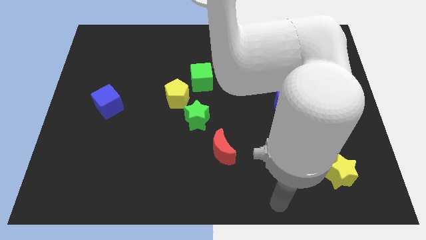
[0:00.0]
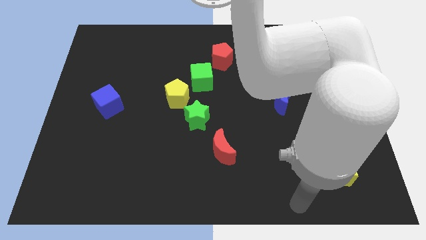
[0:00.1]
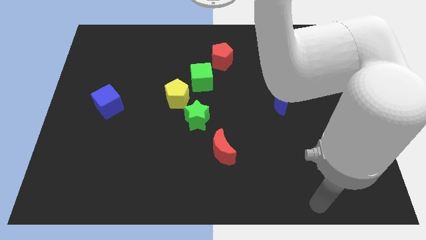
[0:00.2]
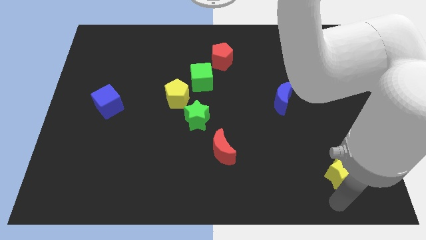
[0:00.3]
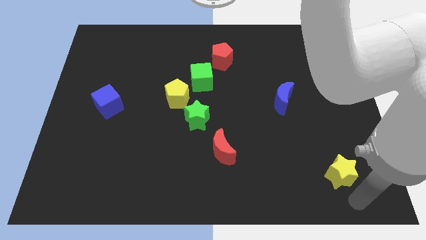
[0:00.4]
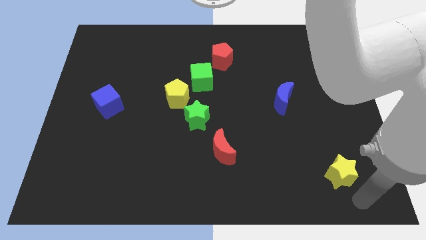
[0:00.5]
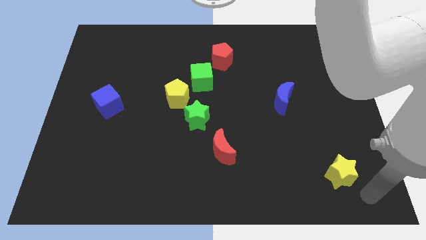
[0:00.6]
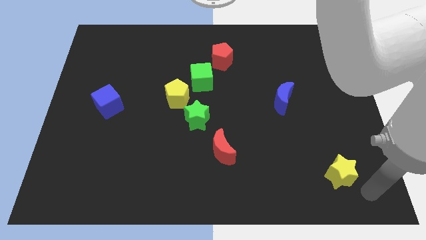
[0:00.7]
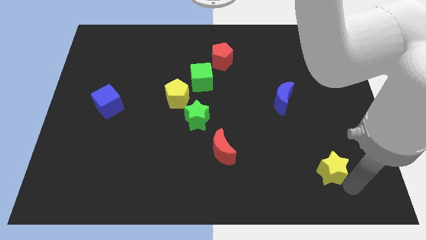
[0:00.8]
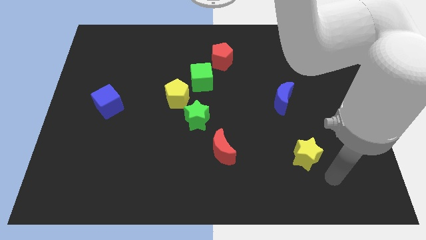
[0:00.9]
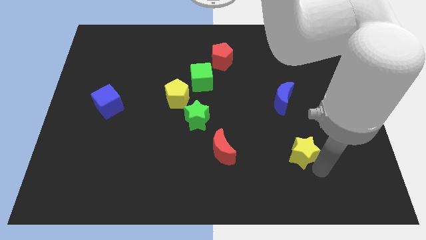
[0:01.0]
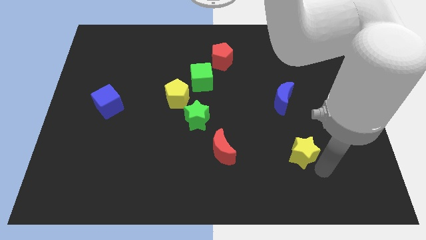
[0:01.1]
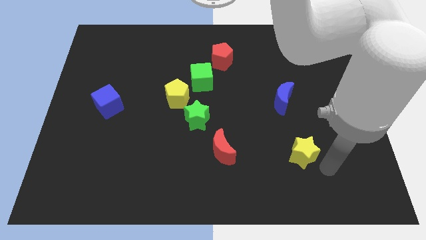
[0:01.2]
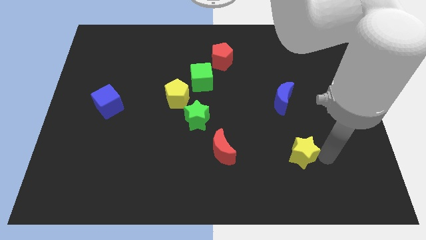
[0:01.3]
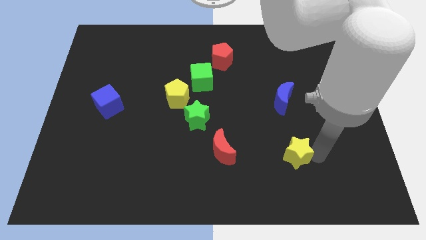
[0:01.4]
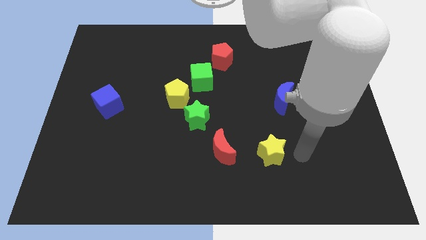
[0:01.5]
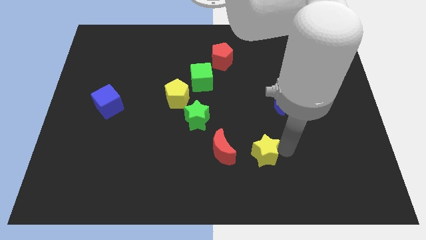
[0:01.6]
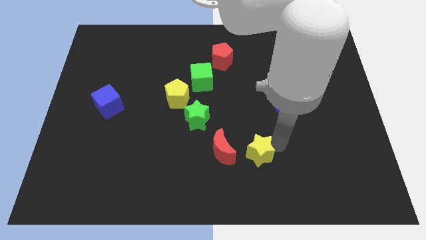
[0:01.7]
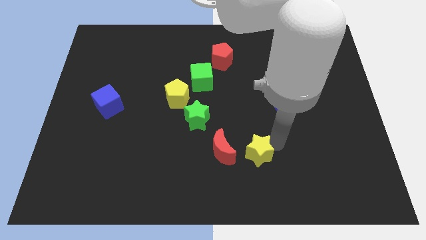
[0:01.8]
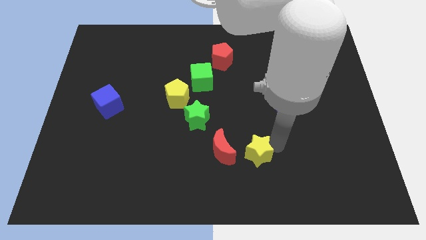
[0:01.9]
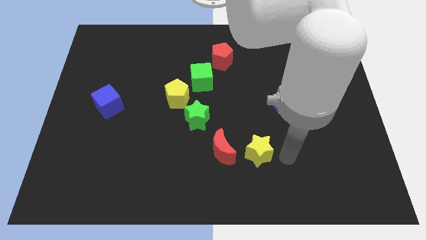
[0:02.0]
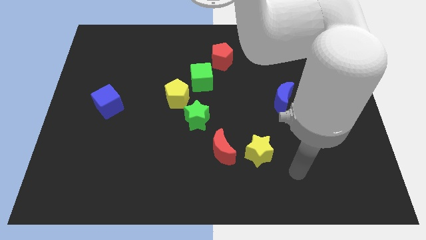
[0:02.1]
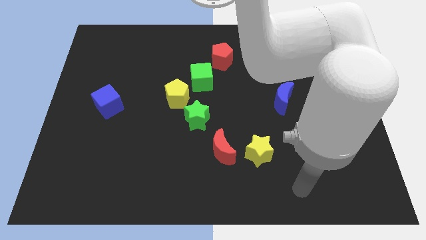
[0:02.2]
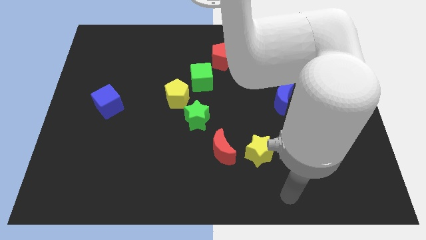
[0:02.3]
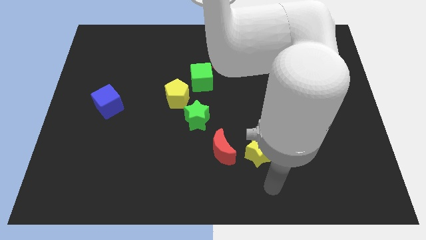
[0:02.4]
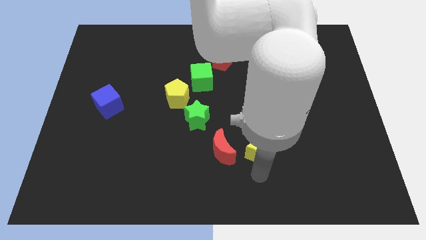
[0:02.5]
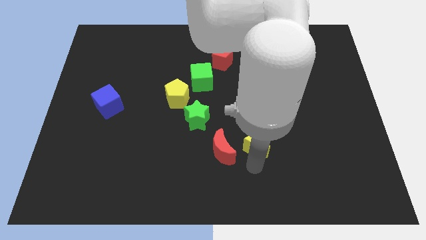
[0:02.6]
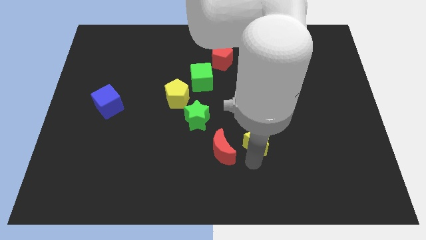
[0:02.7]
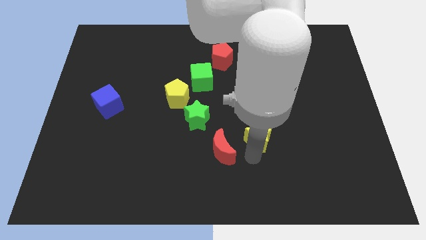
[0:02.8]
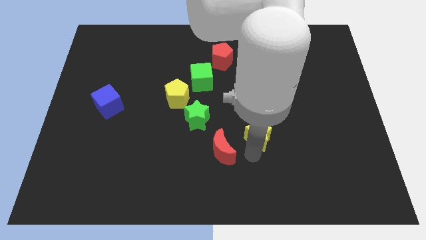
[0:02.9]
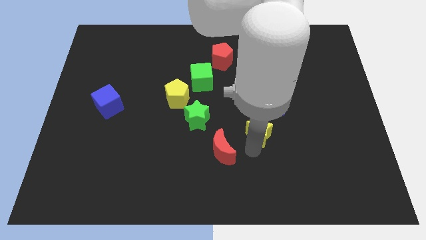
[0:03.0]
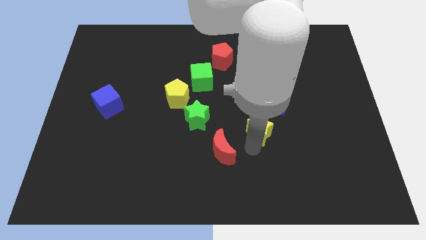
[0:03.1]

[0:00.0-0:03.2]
push yellow star to the top right of red moon

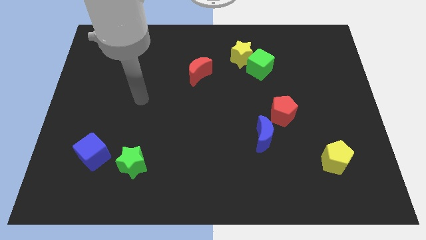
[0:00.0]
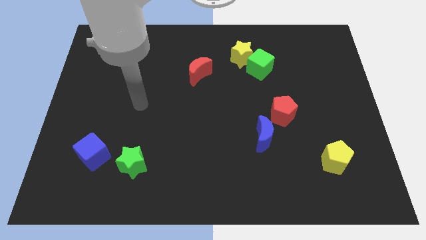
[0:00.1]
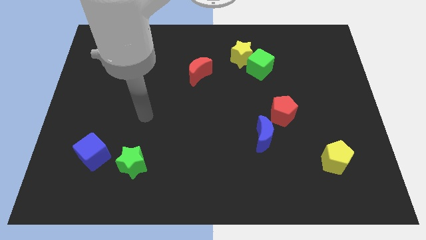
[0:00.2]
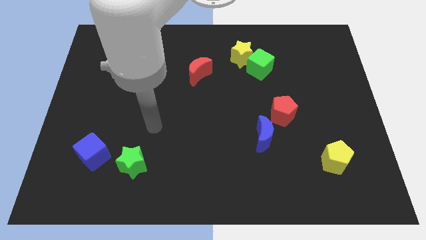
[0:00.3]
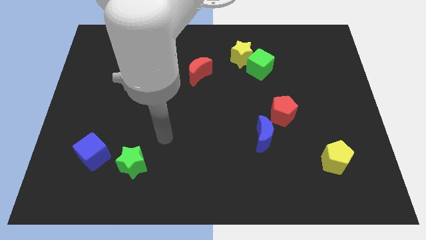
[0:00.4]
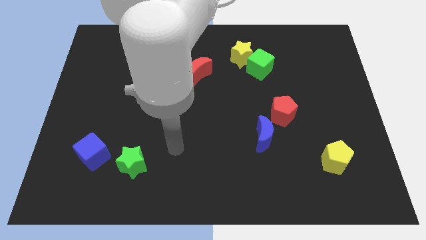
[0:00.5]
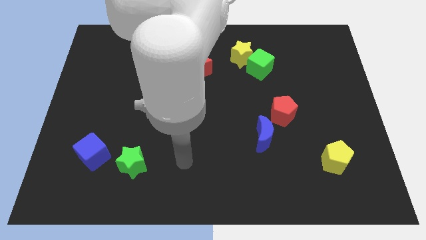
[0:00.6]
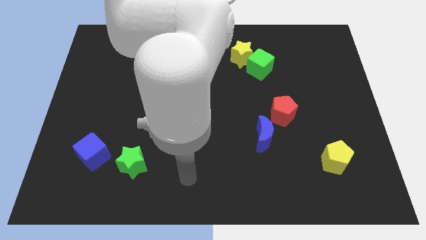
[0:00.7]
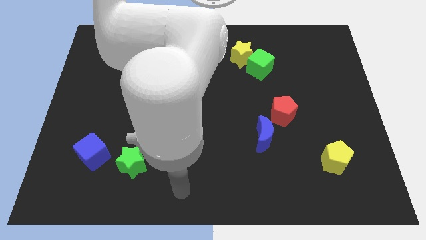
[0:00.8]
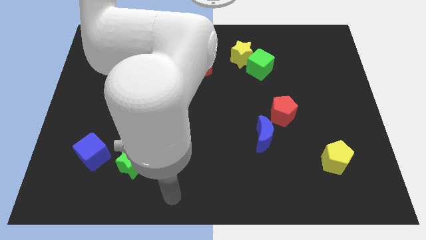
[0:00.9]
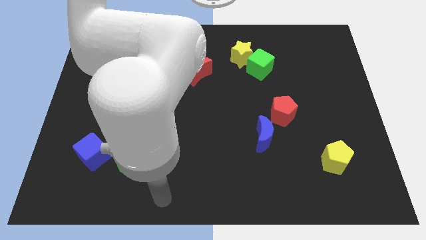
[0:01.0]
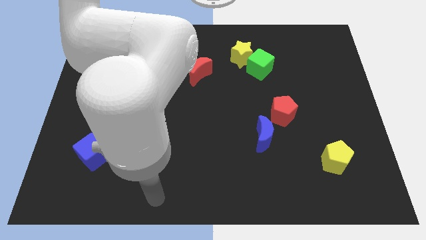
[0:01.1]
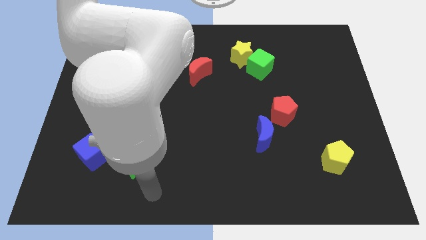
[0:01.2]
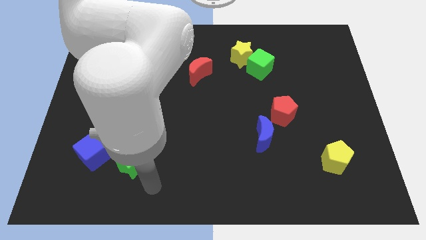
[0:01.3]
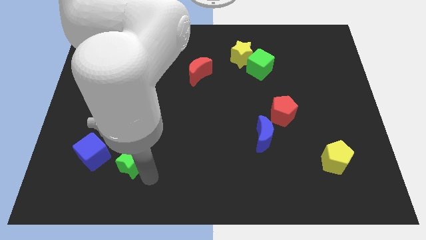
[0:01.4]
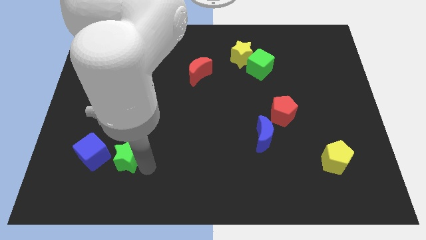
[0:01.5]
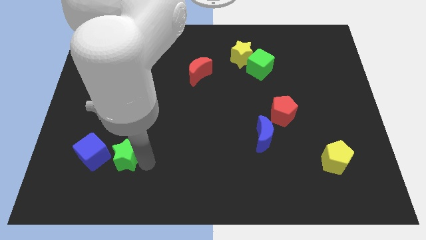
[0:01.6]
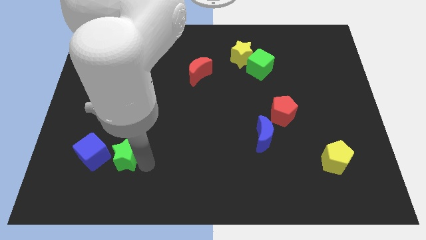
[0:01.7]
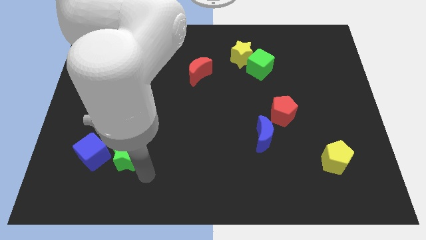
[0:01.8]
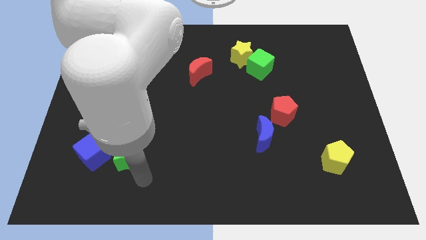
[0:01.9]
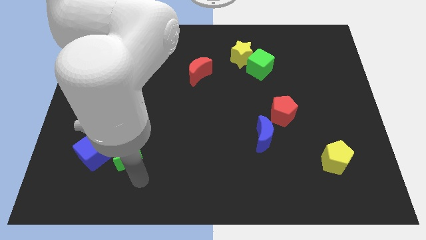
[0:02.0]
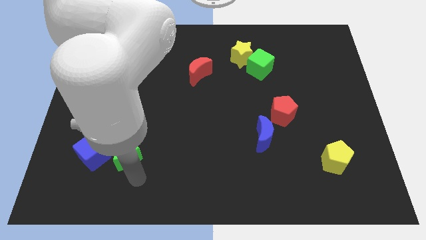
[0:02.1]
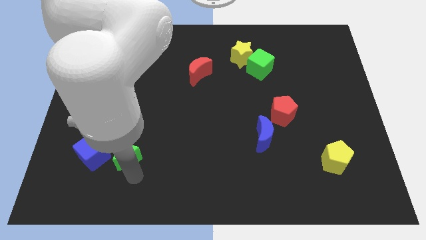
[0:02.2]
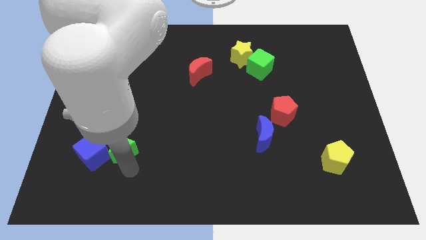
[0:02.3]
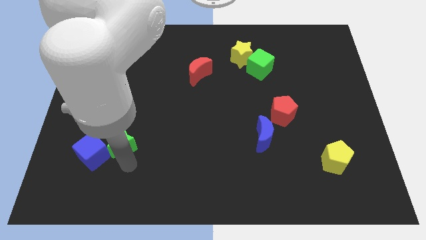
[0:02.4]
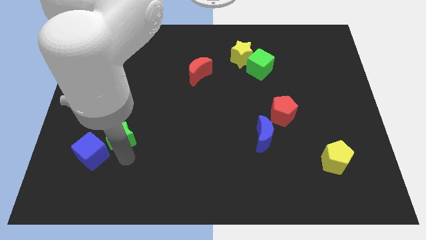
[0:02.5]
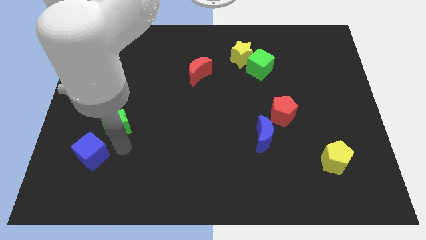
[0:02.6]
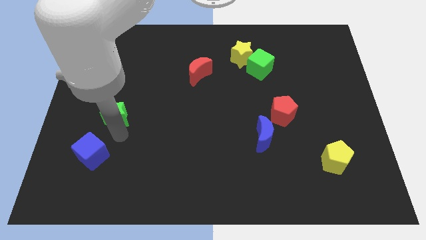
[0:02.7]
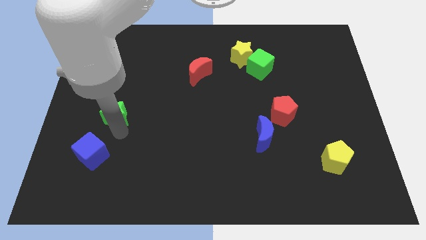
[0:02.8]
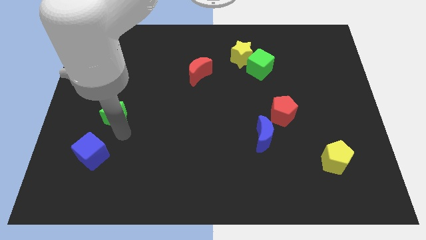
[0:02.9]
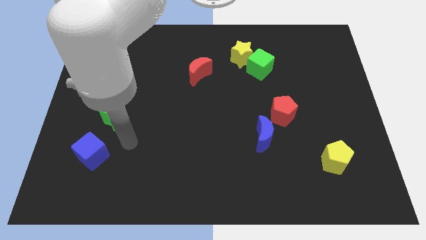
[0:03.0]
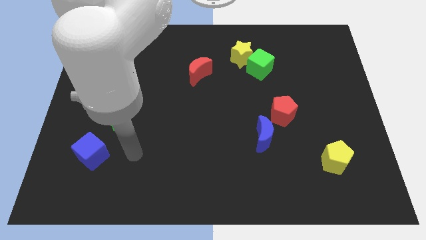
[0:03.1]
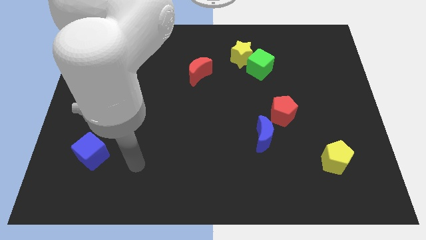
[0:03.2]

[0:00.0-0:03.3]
place the green star diagonally bottom left to the red moon

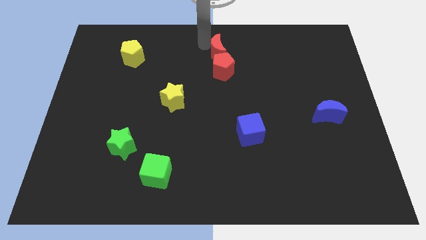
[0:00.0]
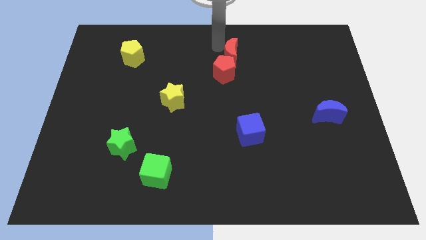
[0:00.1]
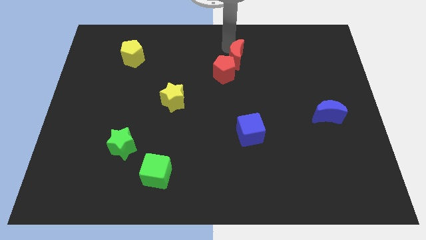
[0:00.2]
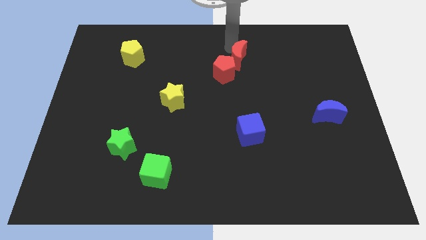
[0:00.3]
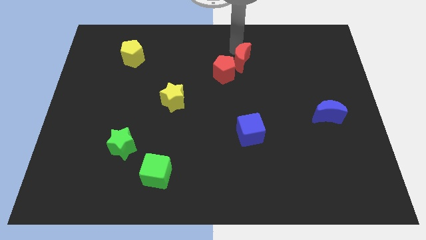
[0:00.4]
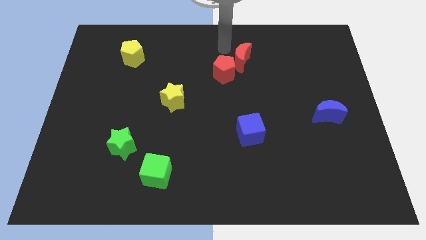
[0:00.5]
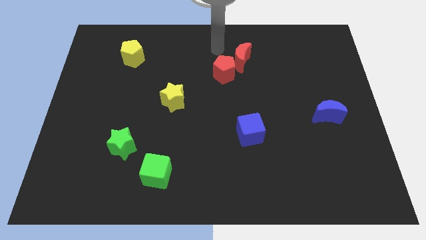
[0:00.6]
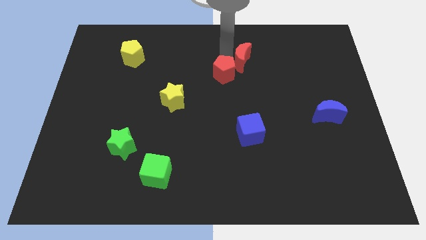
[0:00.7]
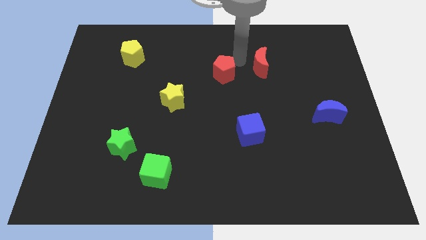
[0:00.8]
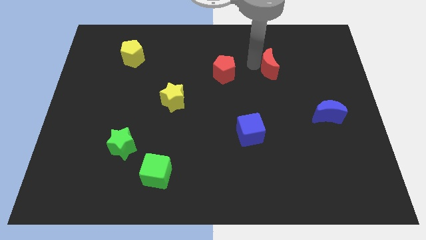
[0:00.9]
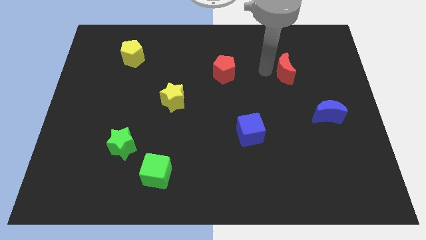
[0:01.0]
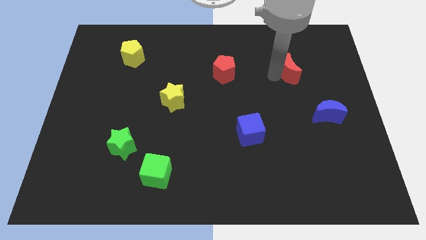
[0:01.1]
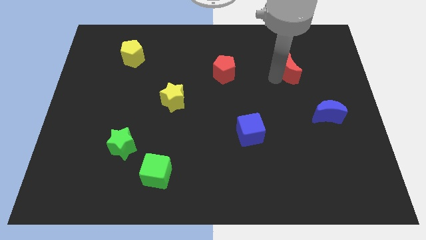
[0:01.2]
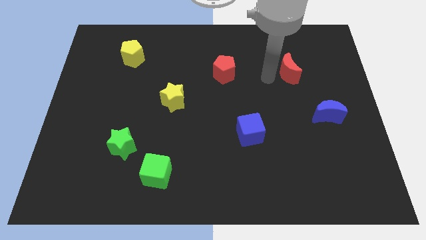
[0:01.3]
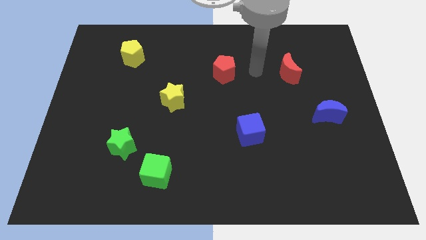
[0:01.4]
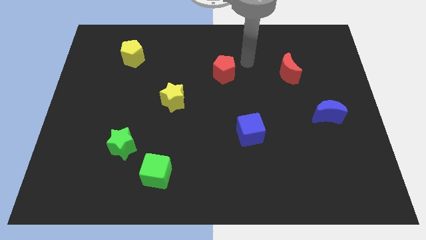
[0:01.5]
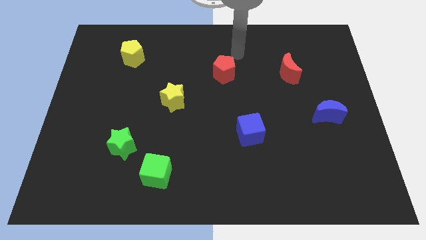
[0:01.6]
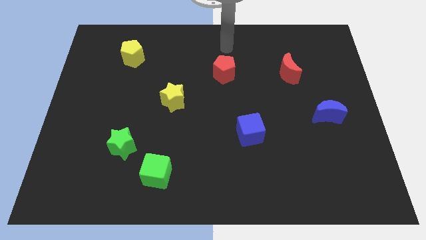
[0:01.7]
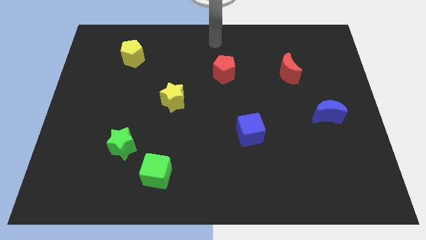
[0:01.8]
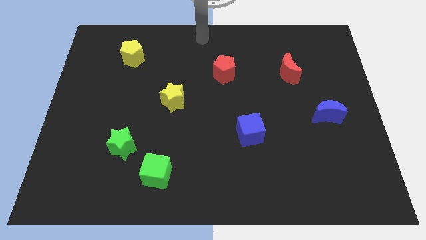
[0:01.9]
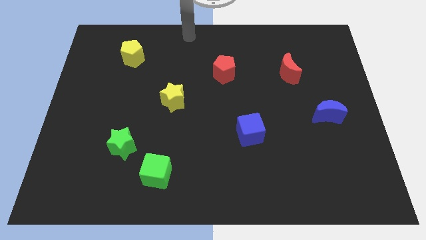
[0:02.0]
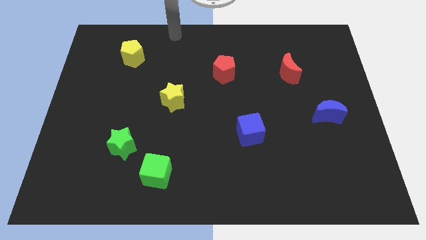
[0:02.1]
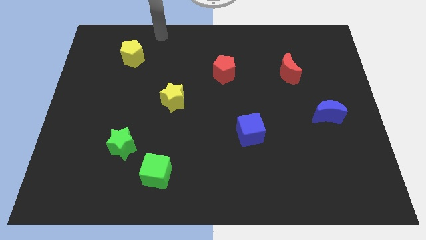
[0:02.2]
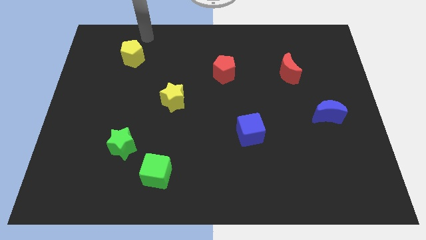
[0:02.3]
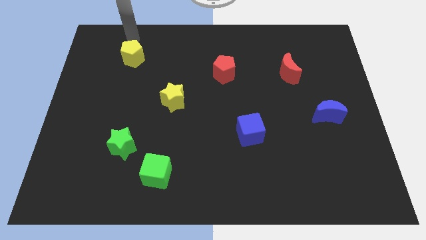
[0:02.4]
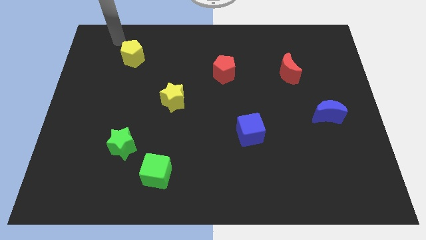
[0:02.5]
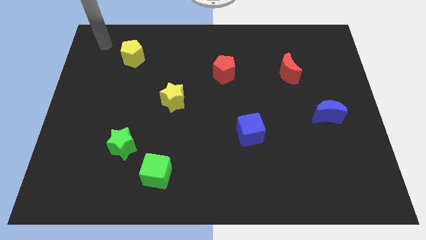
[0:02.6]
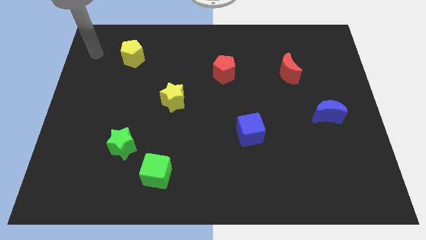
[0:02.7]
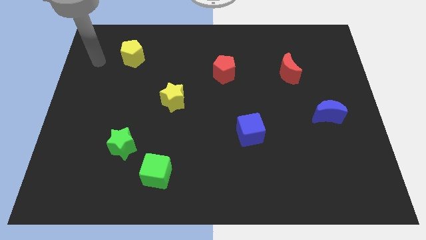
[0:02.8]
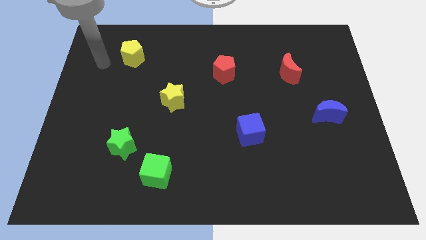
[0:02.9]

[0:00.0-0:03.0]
separate the red moon and red pentagon
